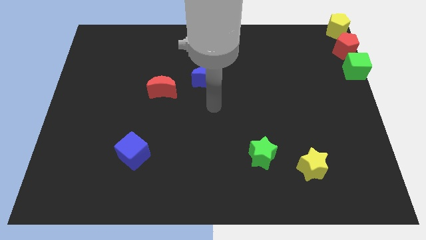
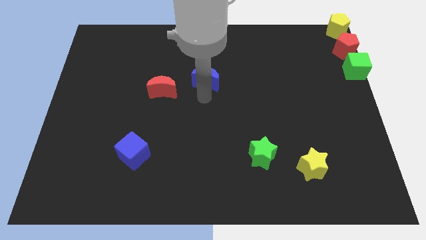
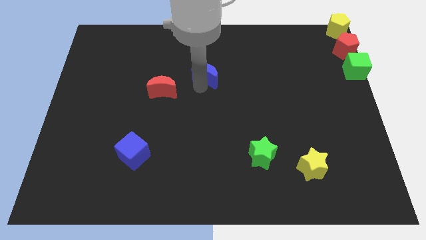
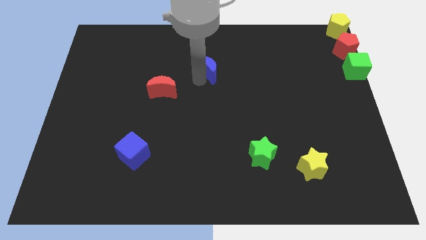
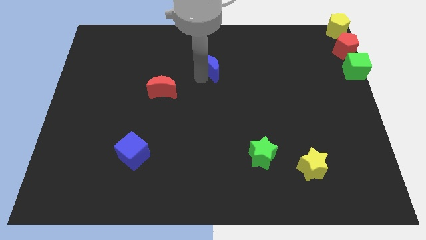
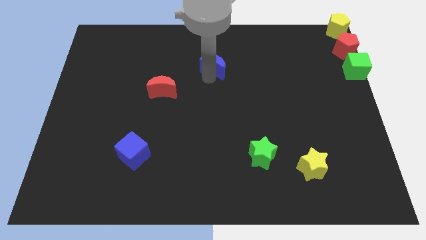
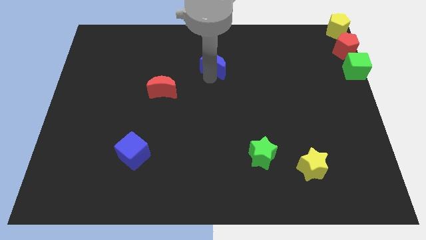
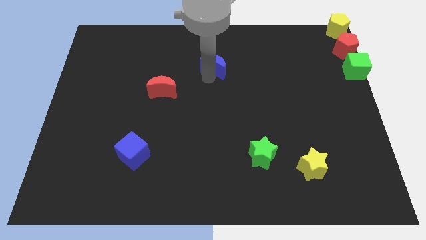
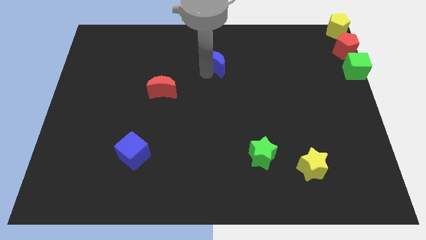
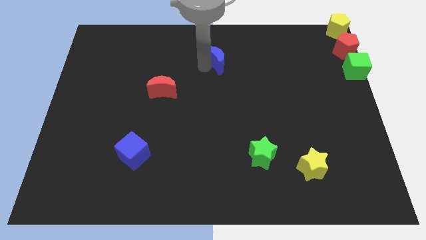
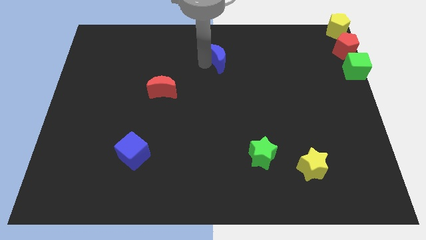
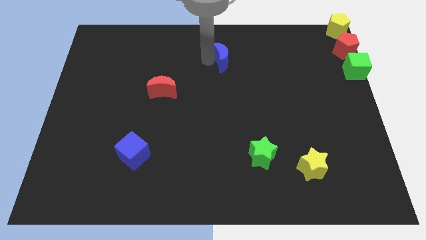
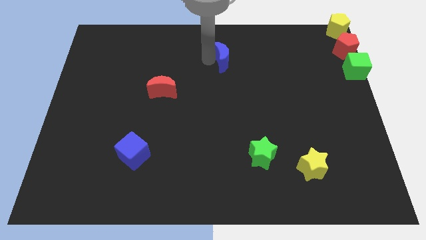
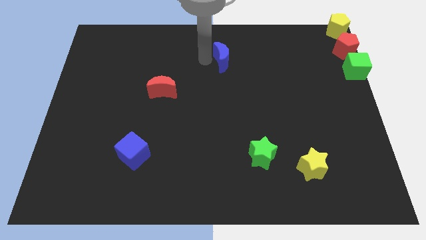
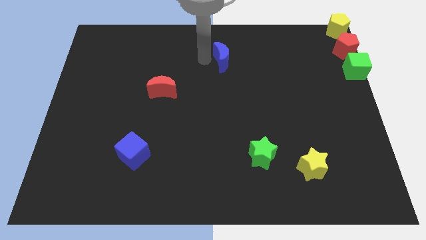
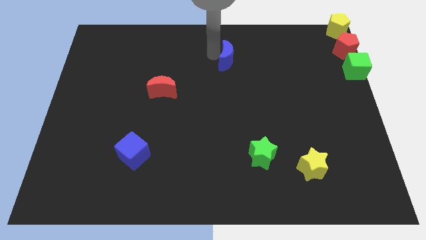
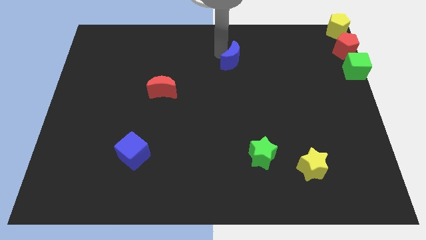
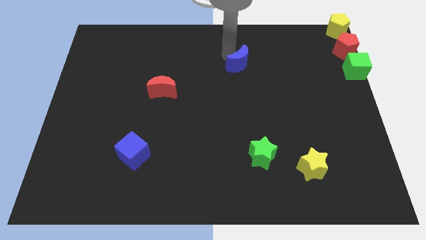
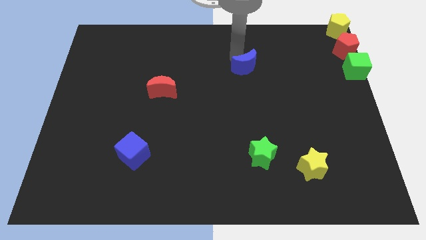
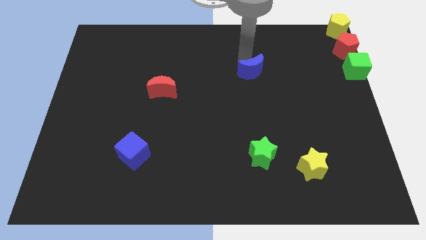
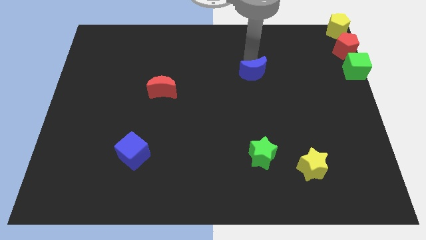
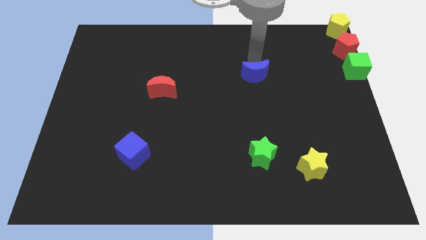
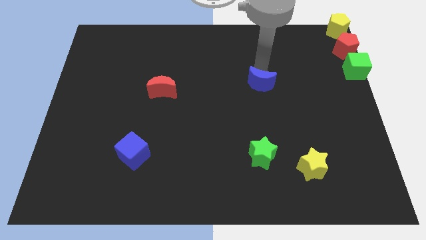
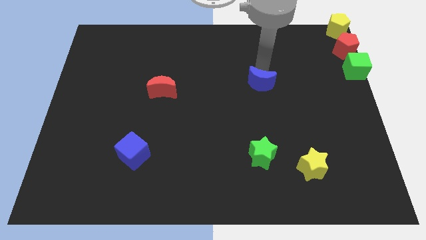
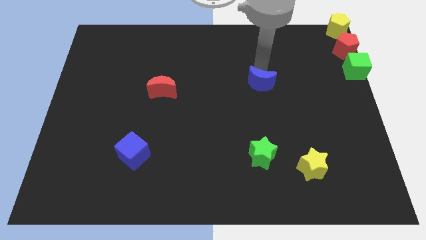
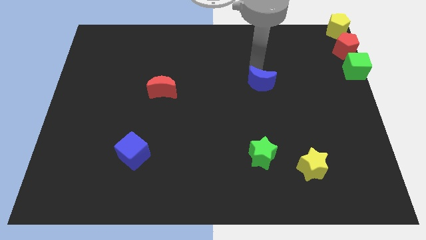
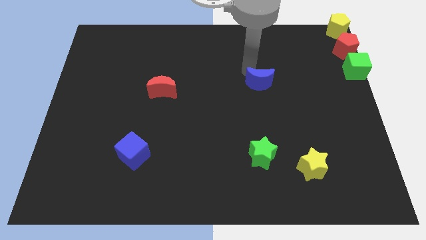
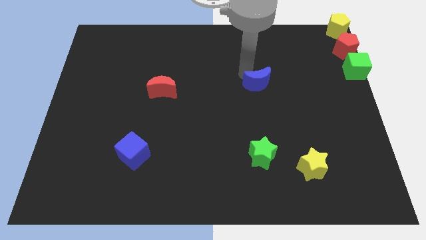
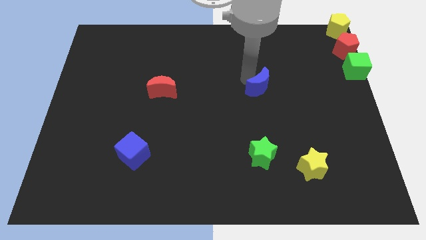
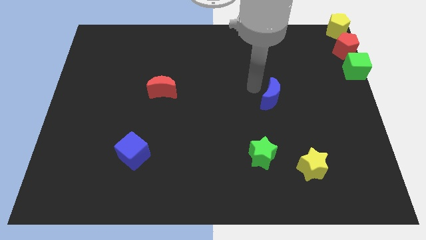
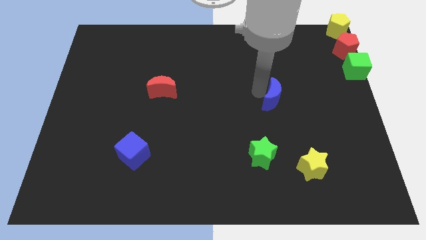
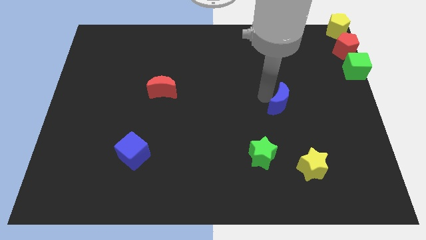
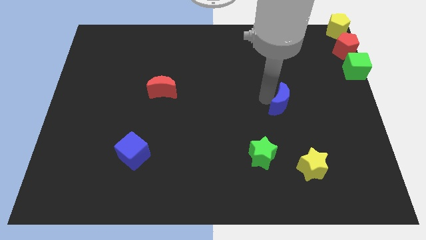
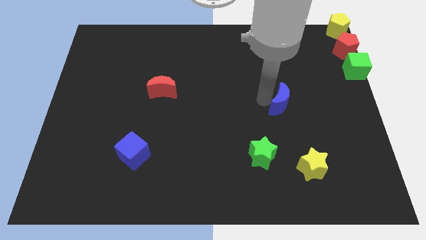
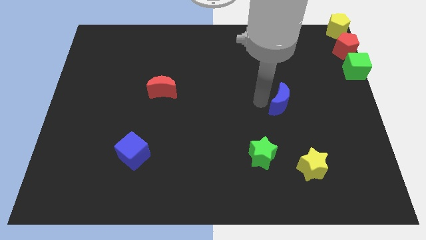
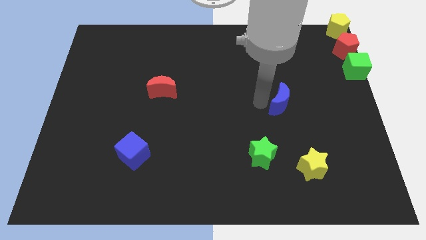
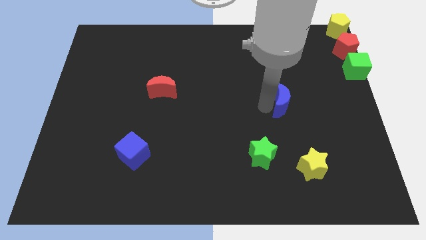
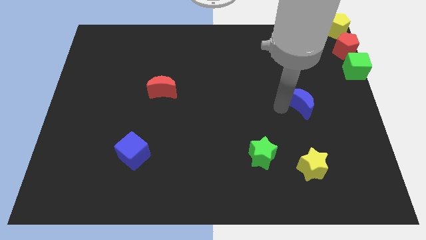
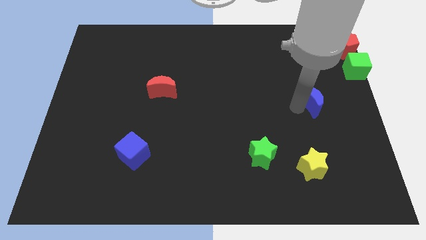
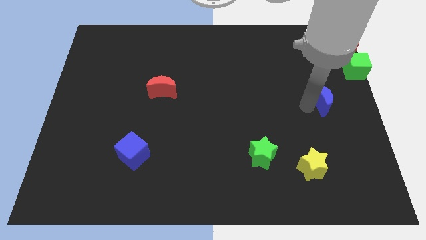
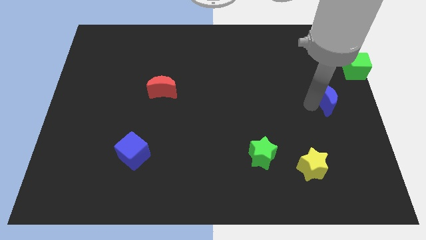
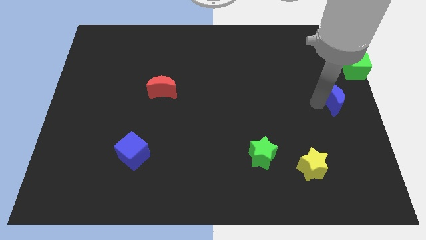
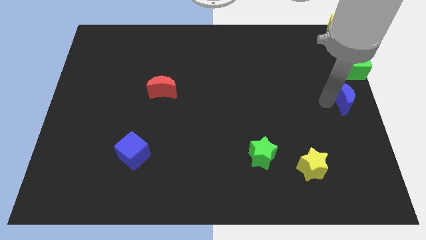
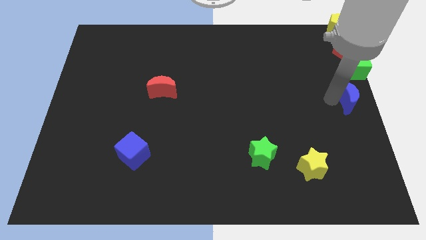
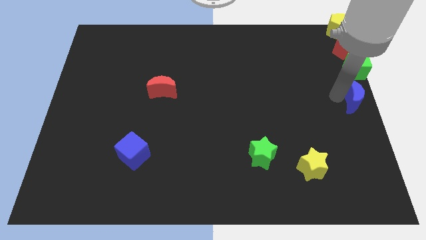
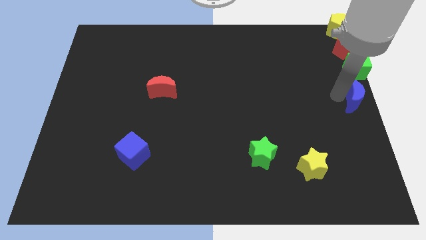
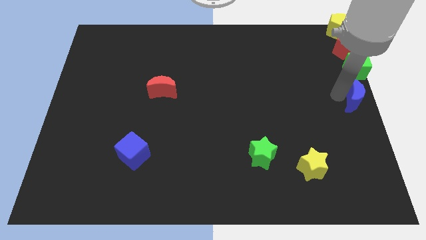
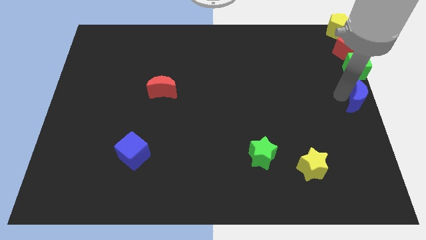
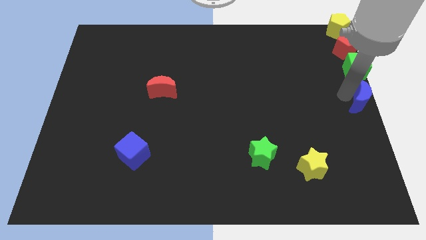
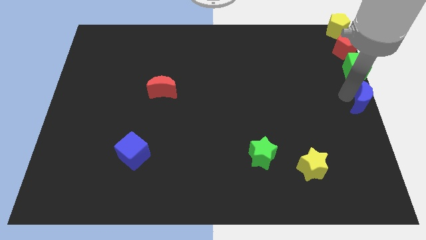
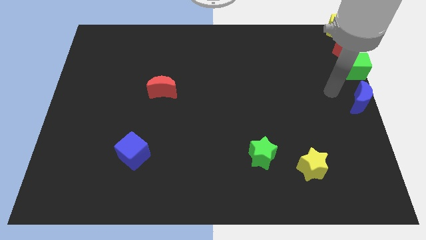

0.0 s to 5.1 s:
place the blue crescent to the bottom of the green cube

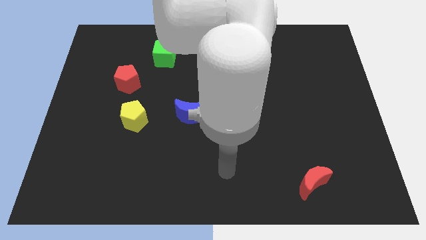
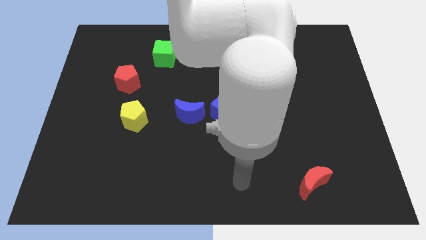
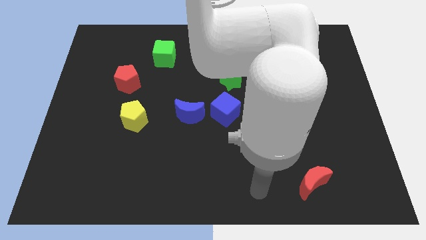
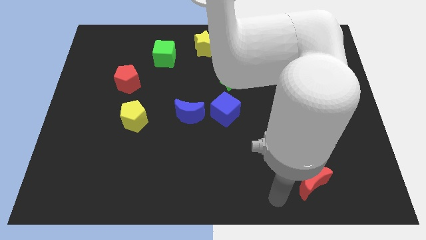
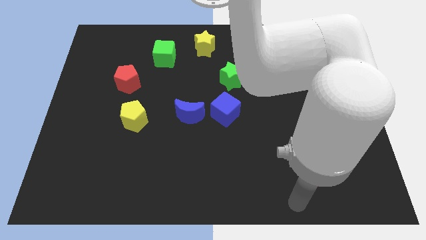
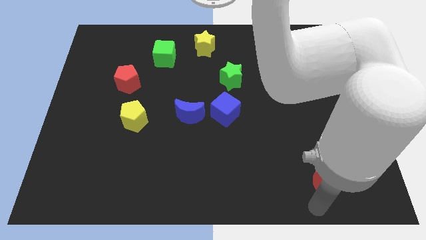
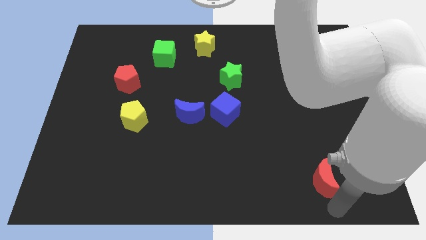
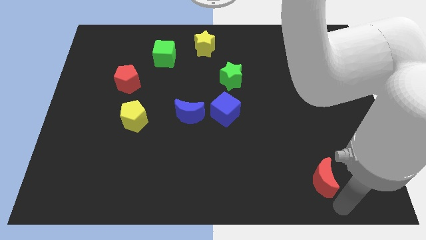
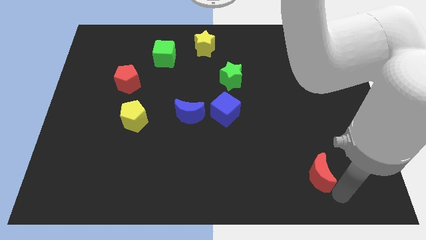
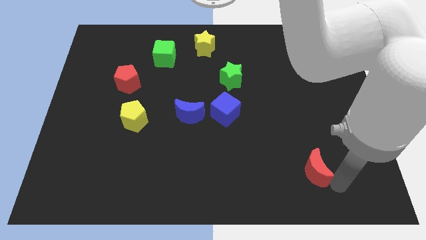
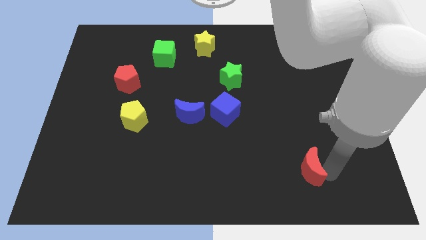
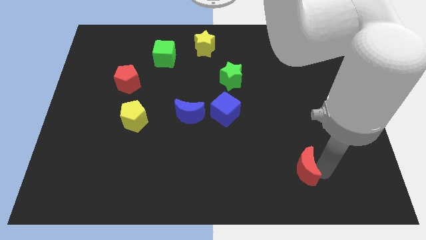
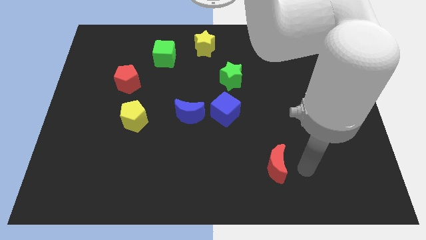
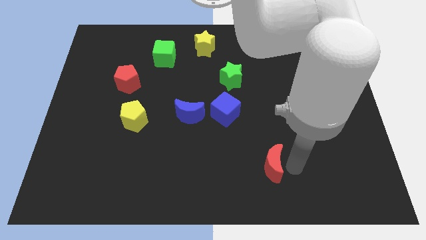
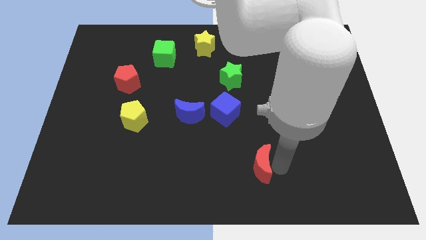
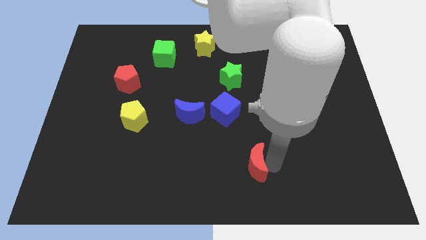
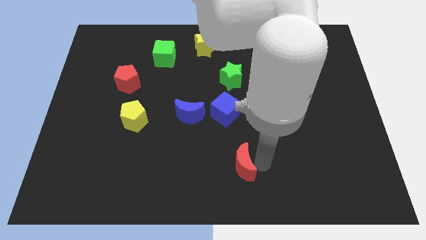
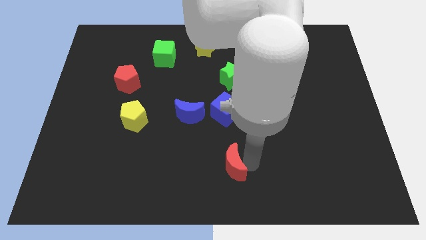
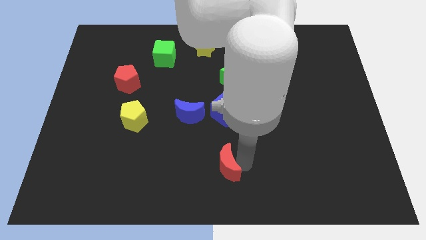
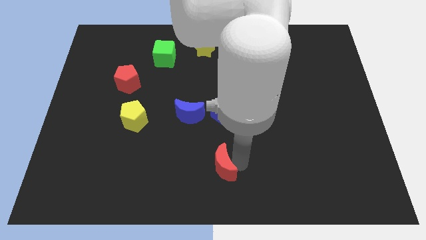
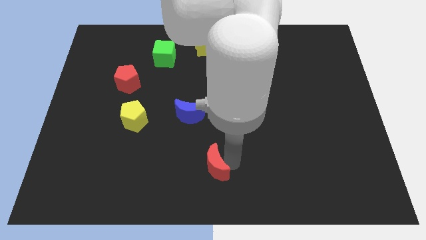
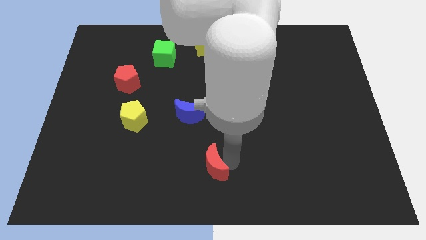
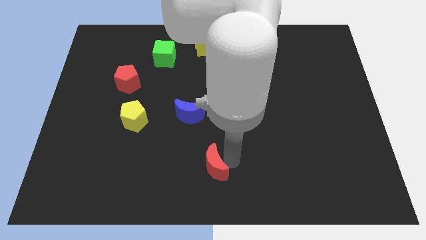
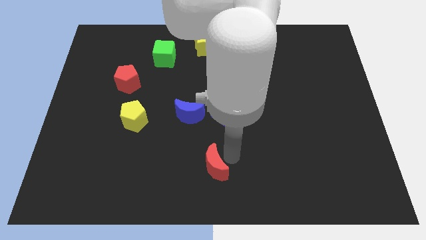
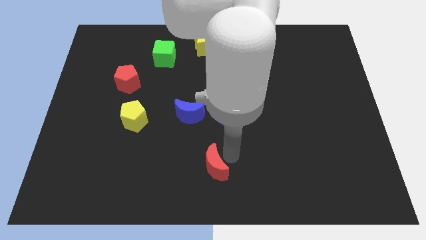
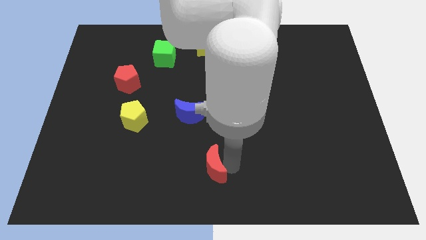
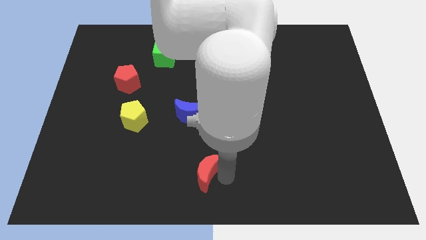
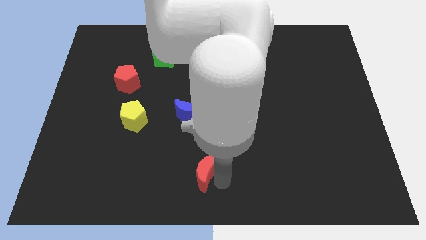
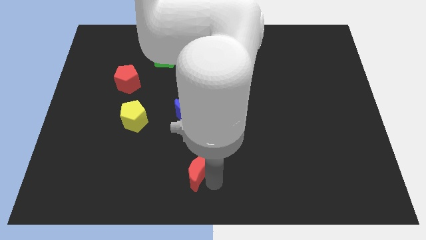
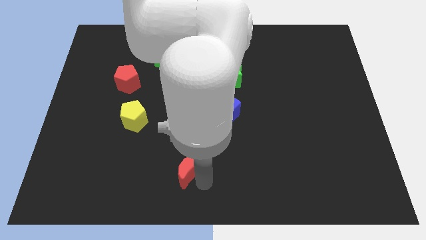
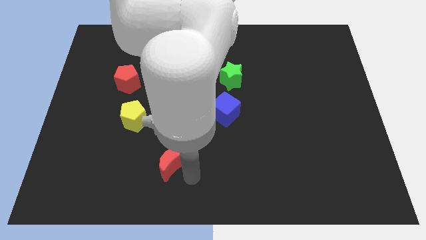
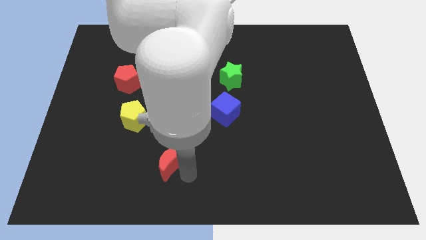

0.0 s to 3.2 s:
place the red crescent vertically below the blue crescent

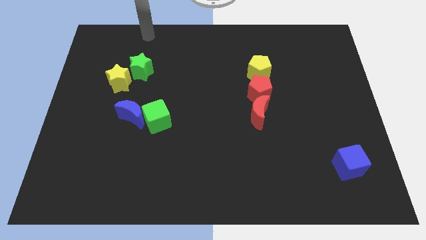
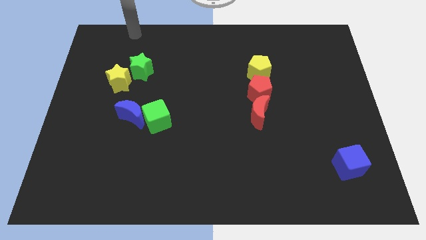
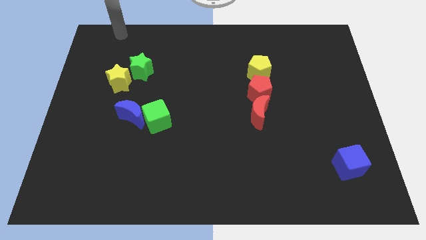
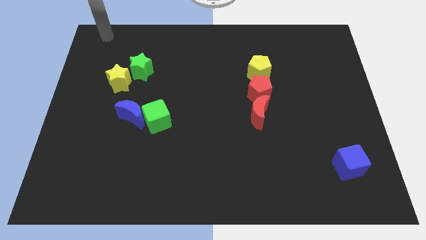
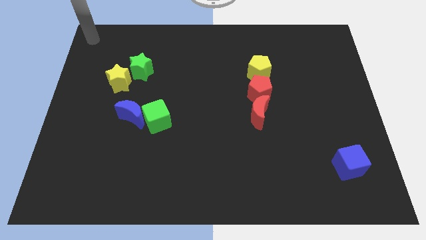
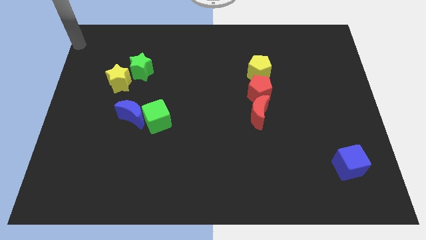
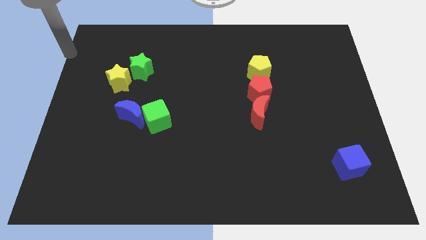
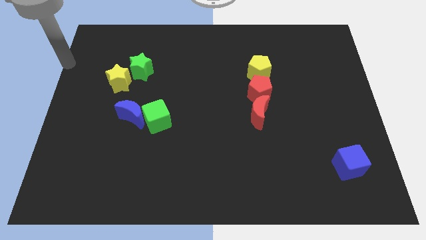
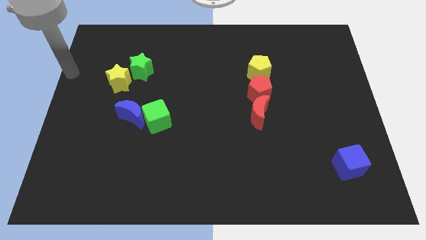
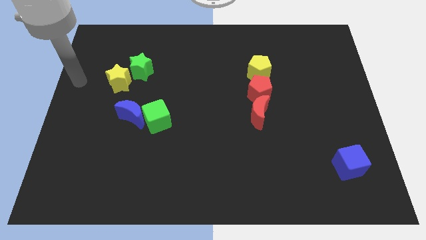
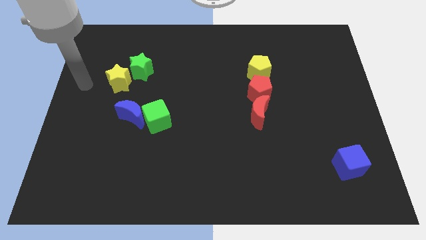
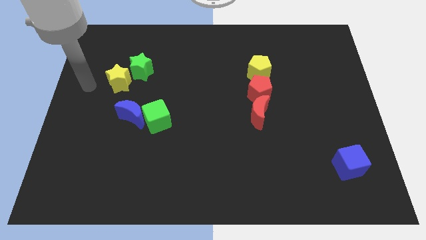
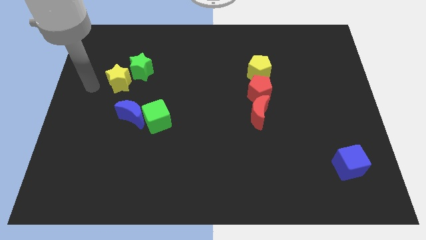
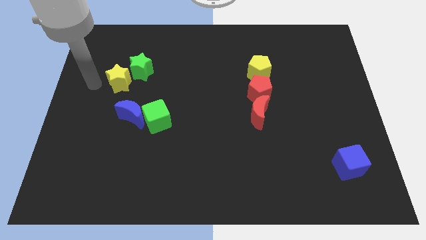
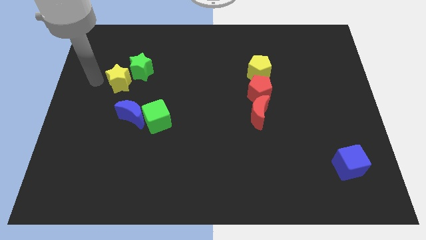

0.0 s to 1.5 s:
point your hand at the left side of the yellow star
